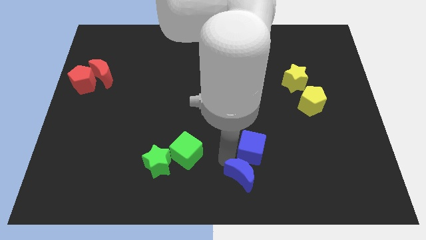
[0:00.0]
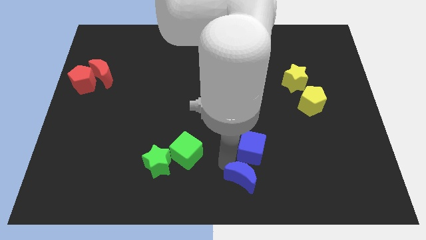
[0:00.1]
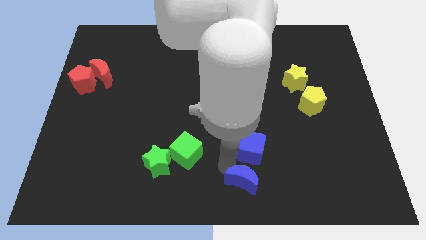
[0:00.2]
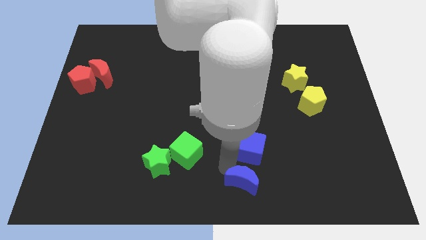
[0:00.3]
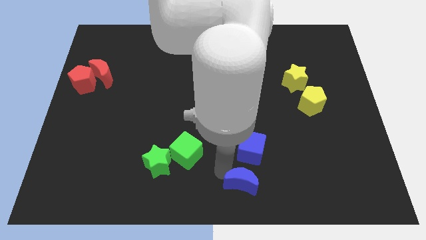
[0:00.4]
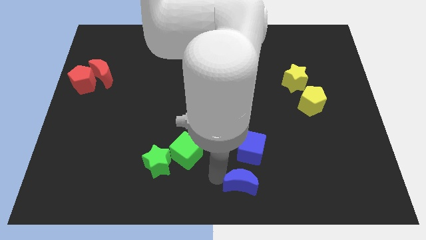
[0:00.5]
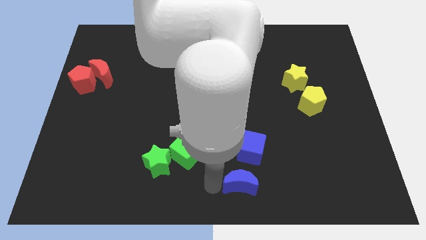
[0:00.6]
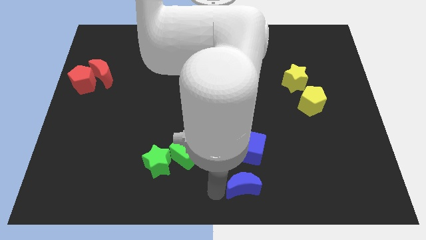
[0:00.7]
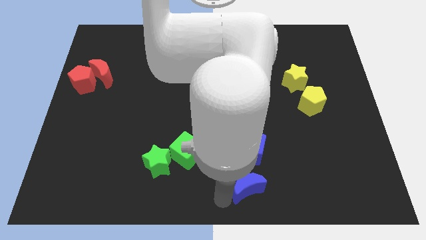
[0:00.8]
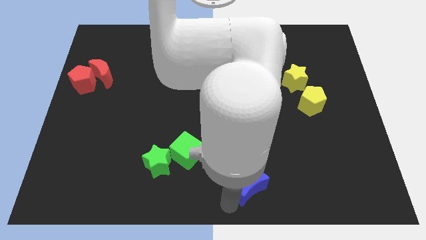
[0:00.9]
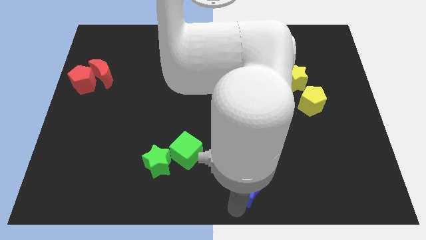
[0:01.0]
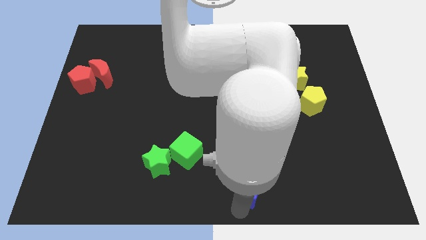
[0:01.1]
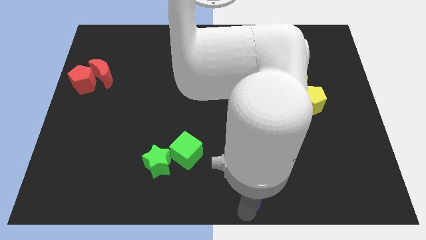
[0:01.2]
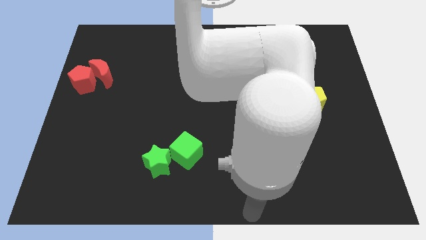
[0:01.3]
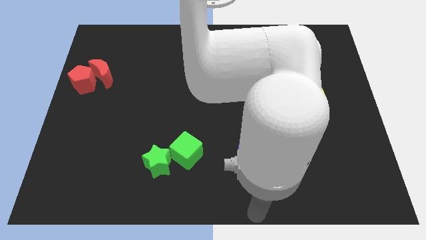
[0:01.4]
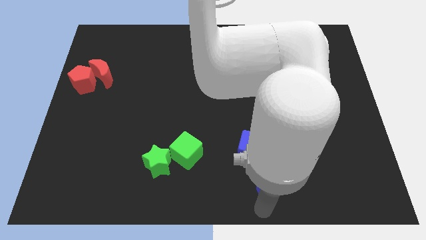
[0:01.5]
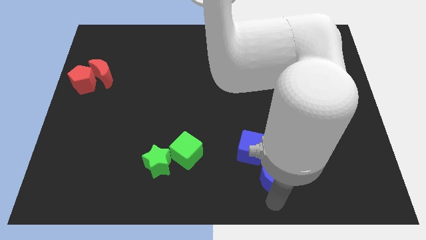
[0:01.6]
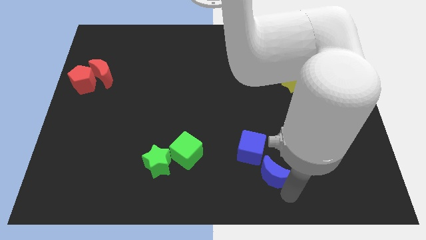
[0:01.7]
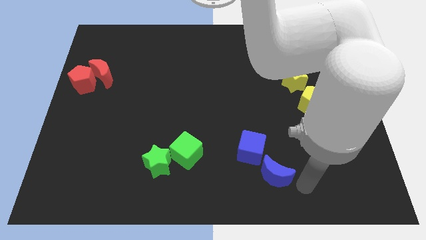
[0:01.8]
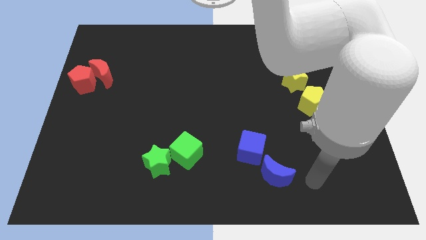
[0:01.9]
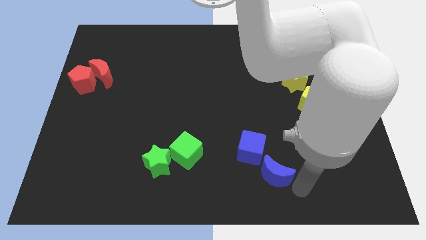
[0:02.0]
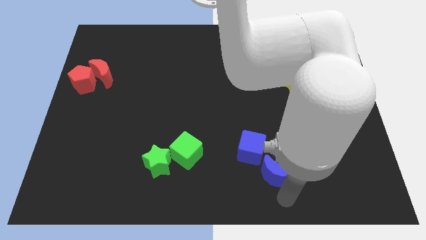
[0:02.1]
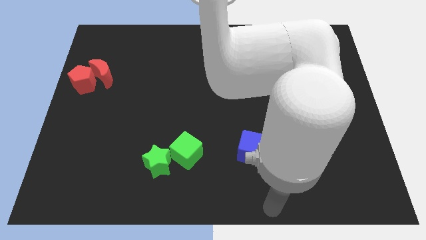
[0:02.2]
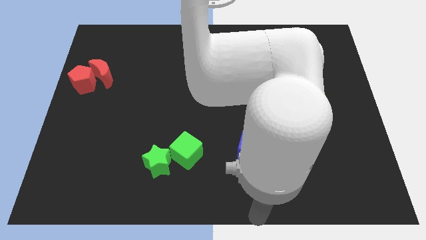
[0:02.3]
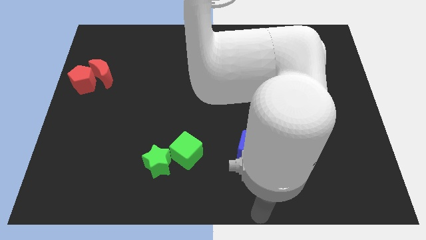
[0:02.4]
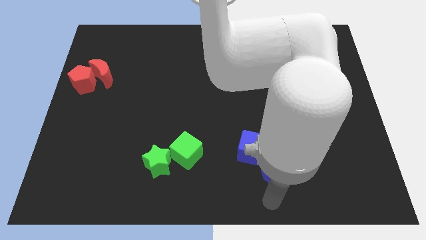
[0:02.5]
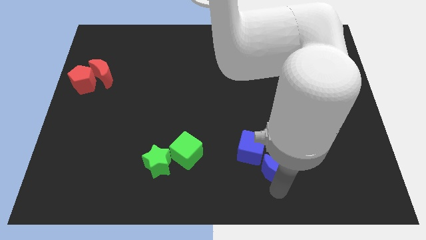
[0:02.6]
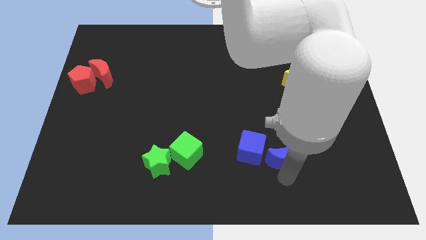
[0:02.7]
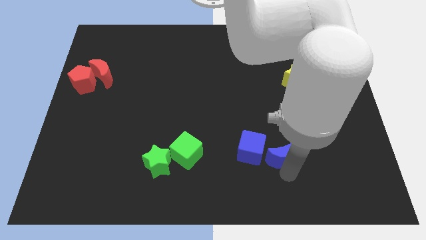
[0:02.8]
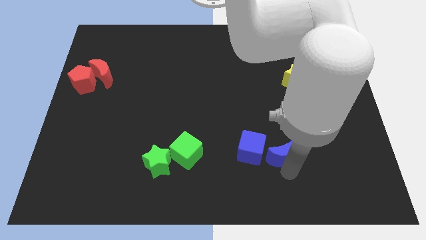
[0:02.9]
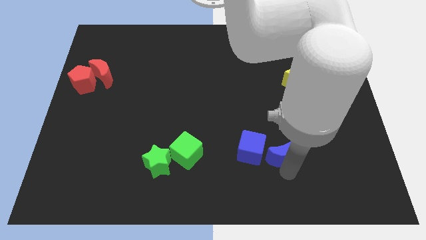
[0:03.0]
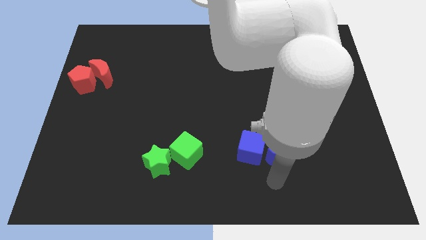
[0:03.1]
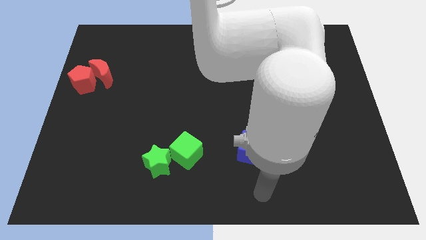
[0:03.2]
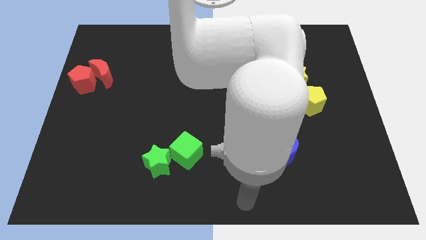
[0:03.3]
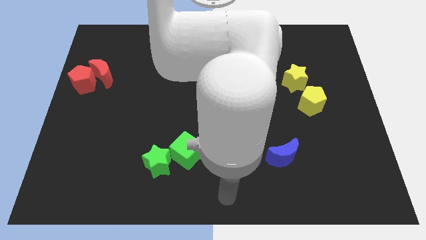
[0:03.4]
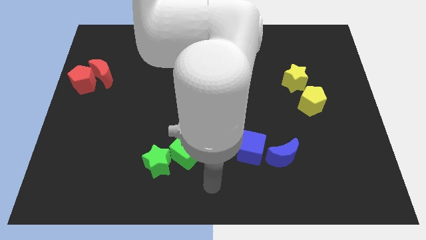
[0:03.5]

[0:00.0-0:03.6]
place the blue moon to the right of the blue cube

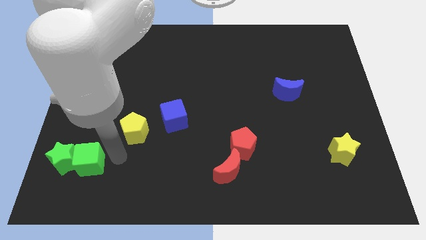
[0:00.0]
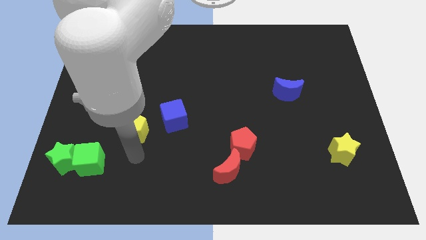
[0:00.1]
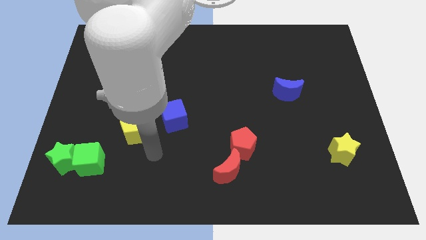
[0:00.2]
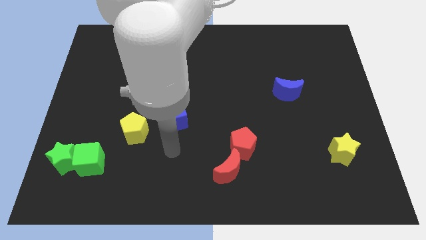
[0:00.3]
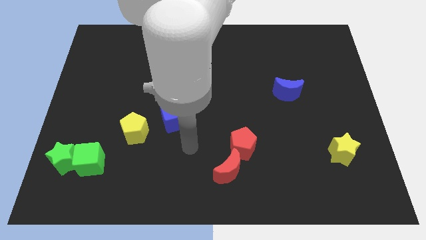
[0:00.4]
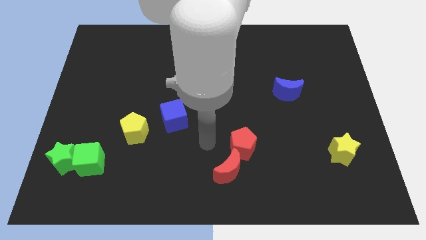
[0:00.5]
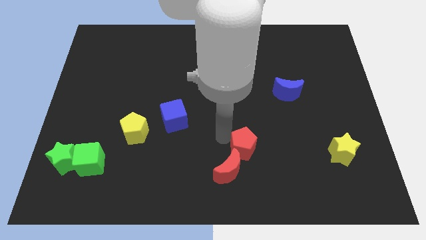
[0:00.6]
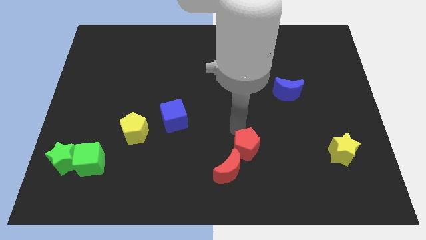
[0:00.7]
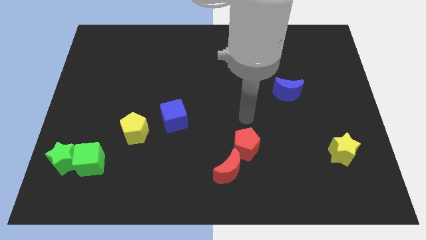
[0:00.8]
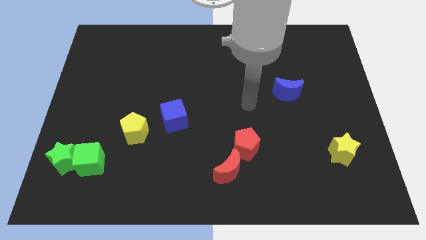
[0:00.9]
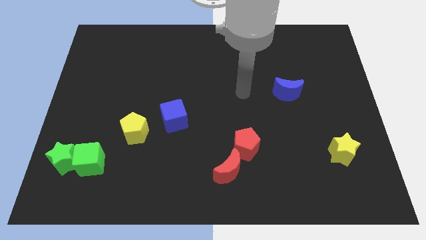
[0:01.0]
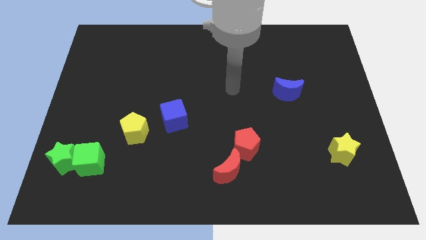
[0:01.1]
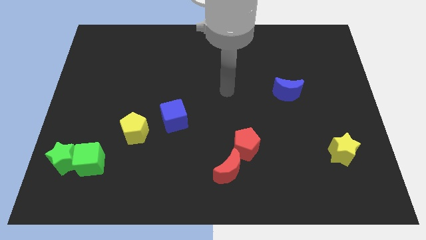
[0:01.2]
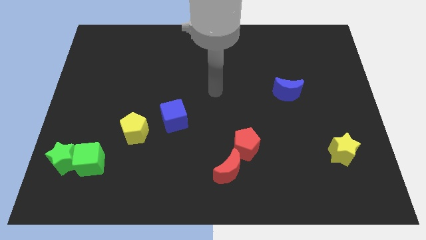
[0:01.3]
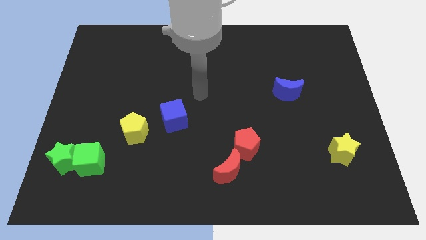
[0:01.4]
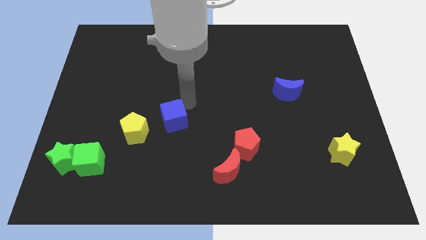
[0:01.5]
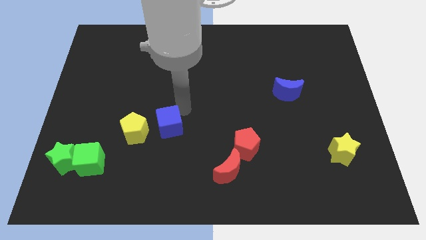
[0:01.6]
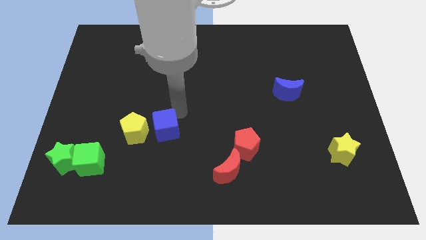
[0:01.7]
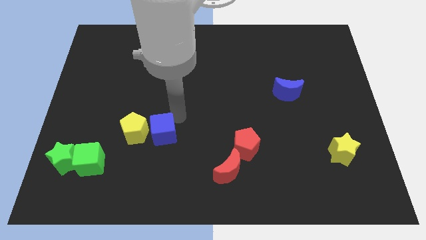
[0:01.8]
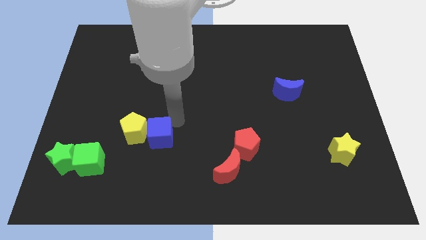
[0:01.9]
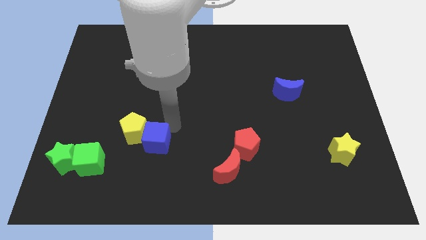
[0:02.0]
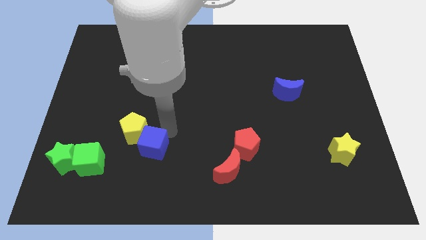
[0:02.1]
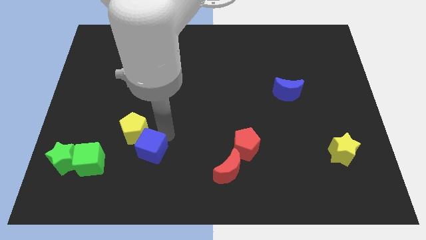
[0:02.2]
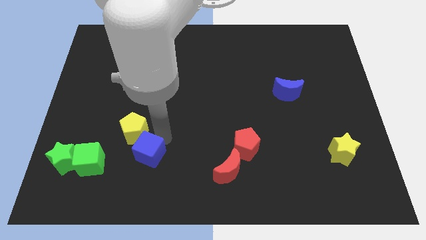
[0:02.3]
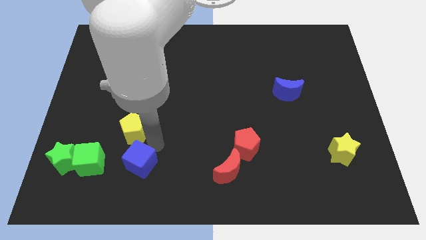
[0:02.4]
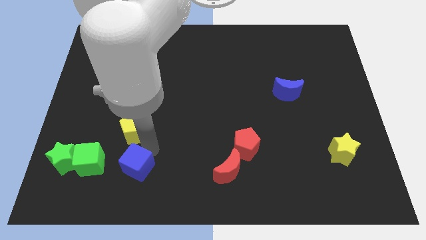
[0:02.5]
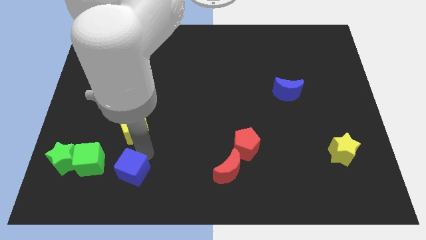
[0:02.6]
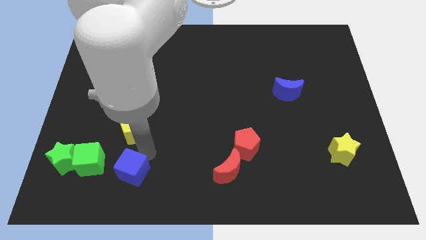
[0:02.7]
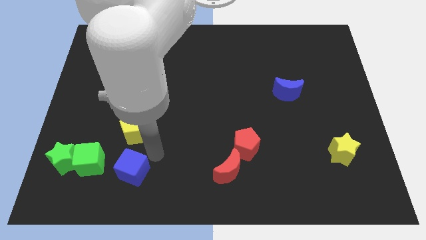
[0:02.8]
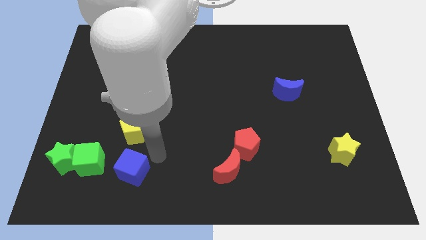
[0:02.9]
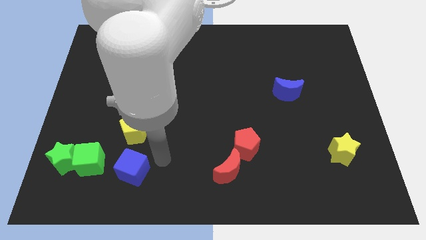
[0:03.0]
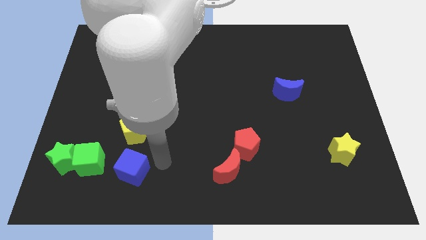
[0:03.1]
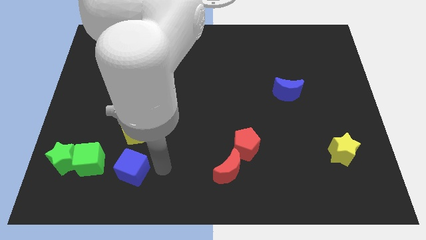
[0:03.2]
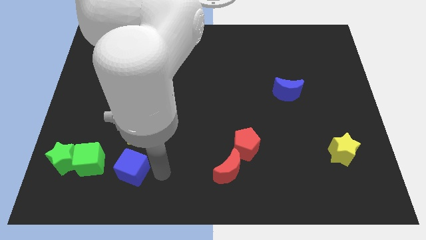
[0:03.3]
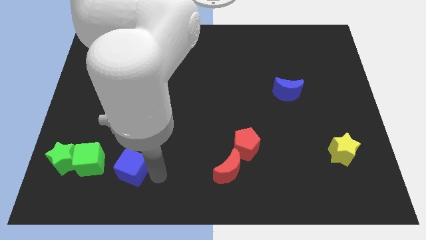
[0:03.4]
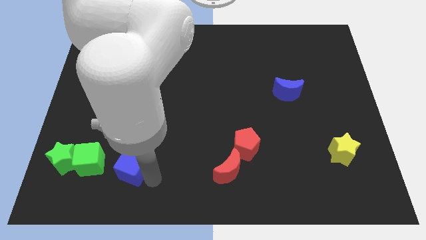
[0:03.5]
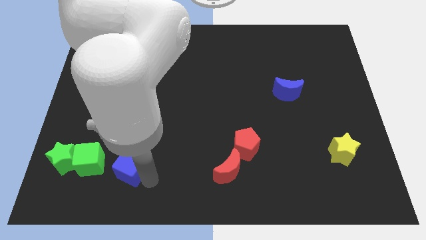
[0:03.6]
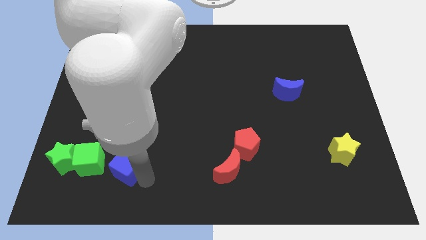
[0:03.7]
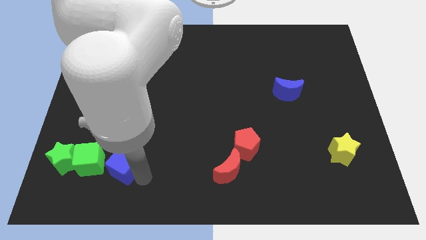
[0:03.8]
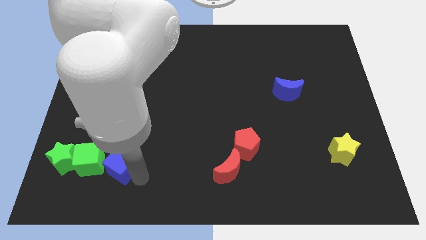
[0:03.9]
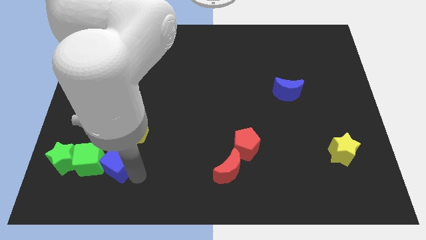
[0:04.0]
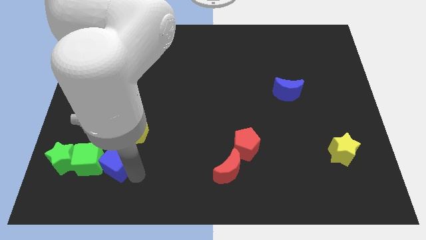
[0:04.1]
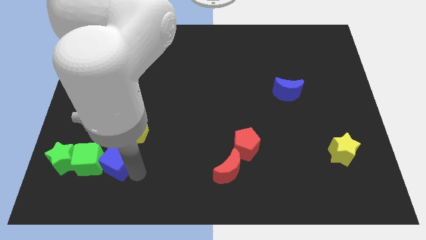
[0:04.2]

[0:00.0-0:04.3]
place the blue cube to the right of green cube

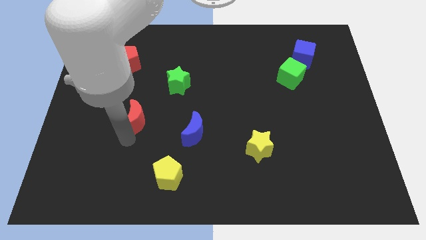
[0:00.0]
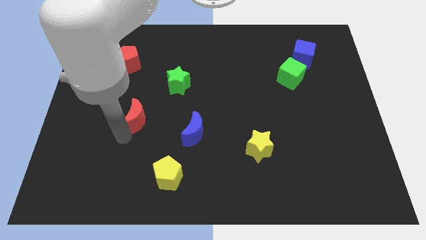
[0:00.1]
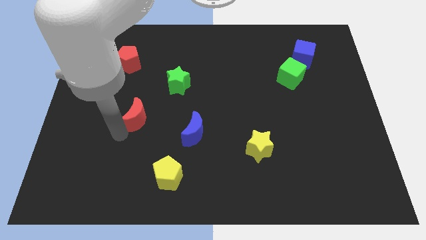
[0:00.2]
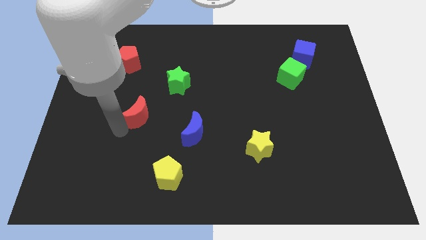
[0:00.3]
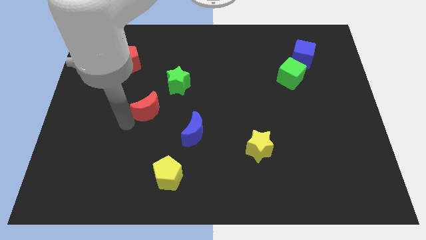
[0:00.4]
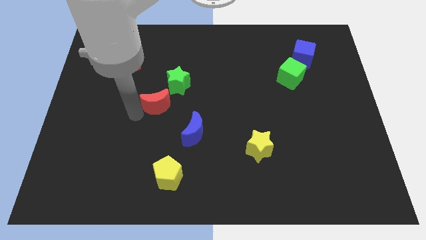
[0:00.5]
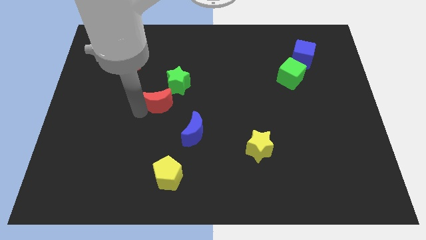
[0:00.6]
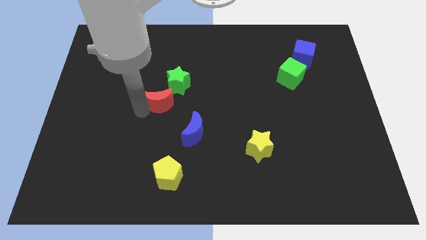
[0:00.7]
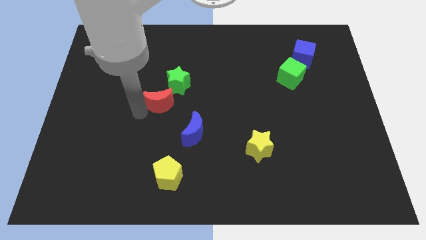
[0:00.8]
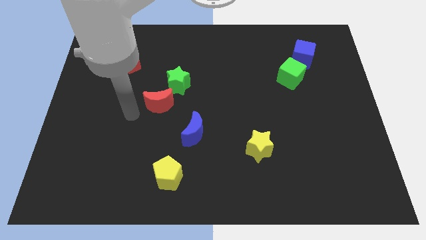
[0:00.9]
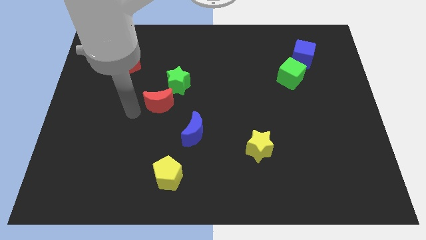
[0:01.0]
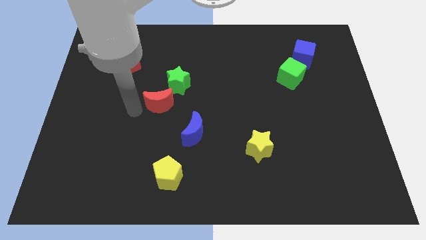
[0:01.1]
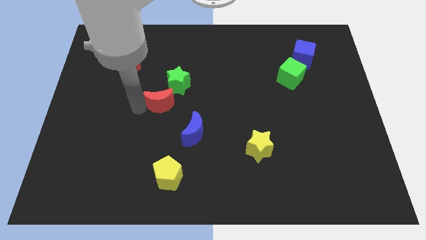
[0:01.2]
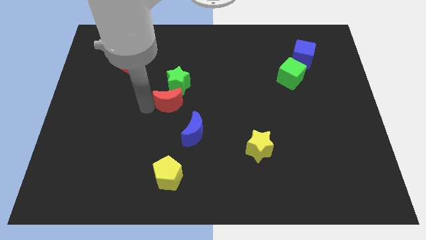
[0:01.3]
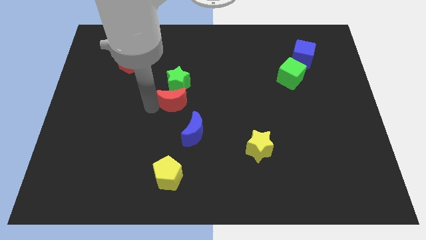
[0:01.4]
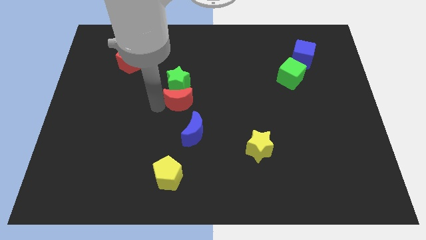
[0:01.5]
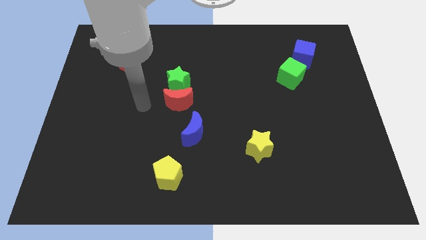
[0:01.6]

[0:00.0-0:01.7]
put the red moon below the green star
